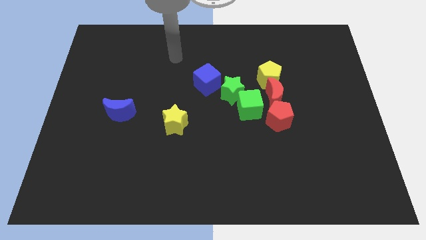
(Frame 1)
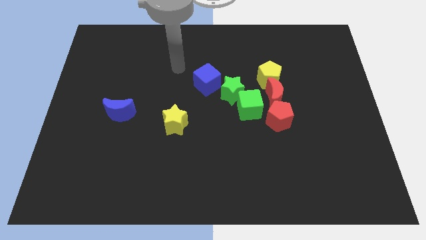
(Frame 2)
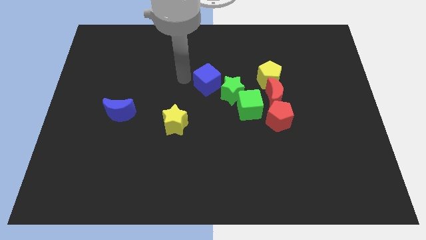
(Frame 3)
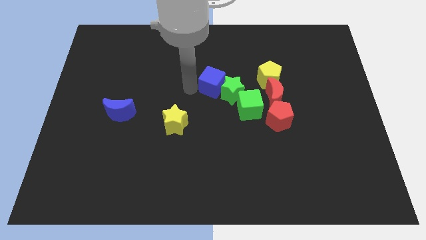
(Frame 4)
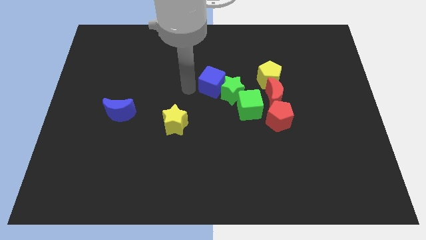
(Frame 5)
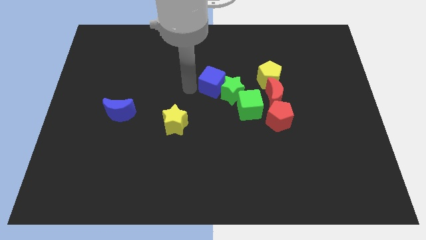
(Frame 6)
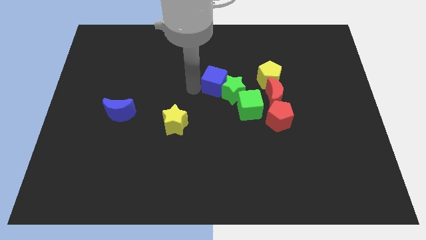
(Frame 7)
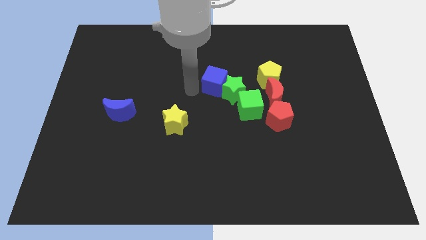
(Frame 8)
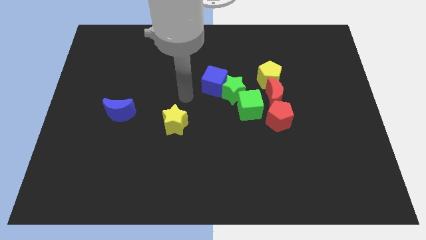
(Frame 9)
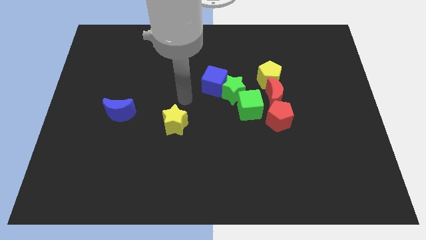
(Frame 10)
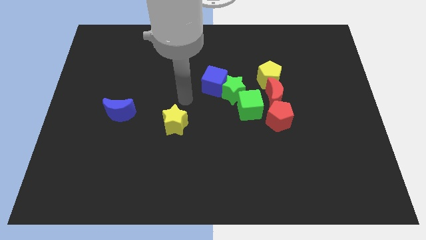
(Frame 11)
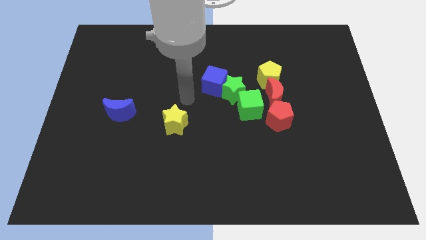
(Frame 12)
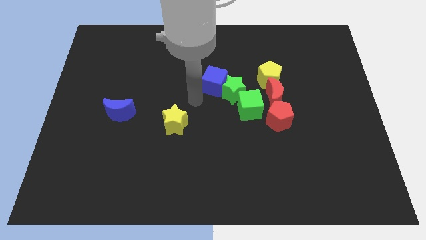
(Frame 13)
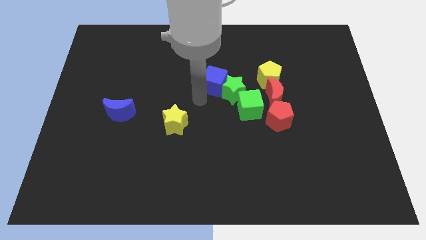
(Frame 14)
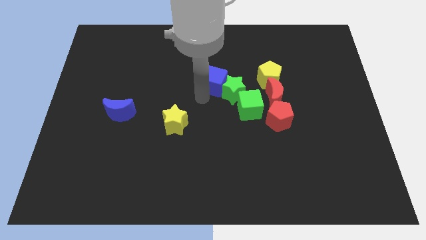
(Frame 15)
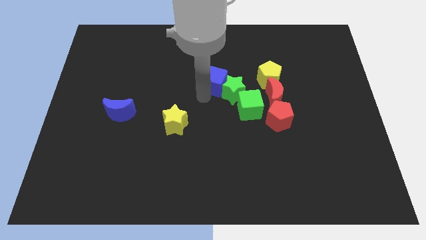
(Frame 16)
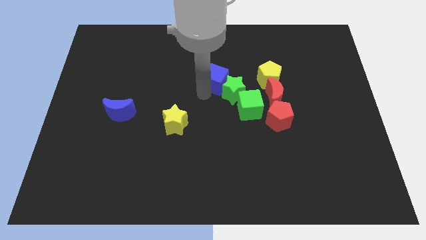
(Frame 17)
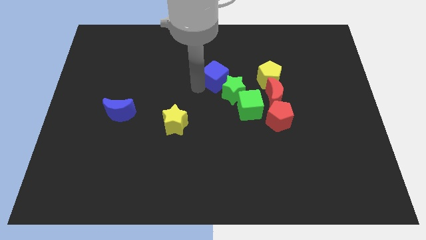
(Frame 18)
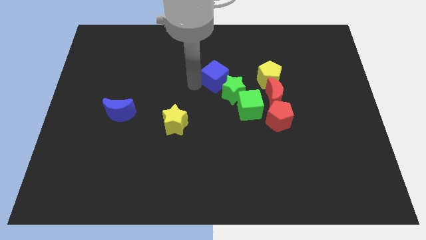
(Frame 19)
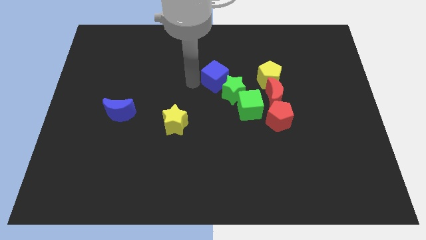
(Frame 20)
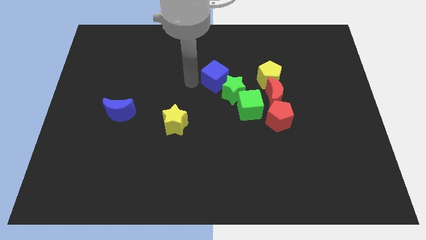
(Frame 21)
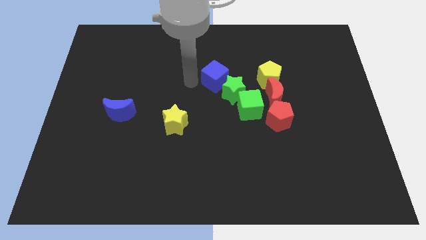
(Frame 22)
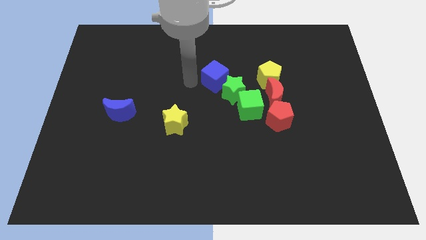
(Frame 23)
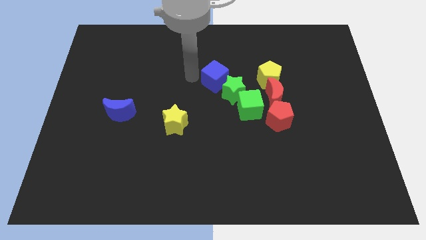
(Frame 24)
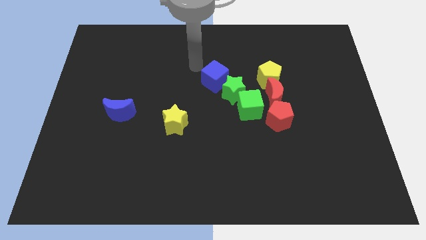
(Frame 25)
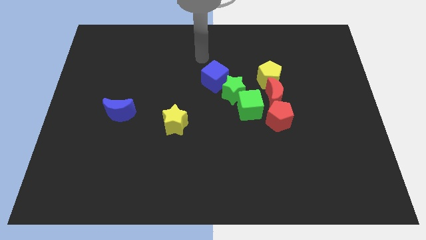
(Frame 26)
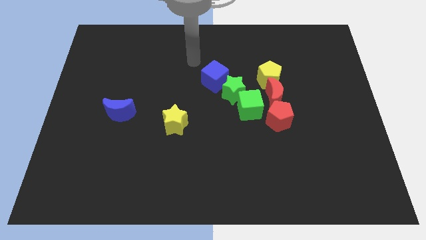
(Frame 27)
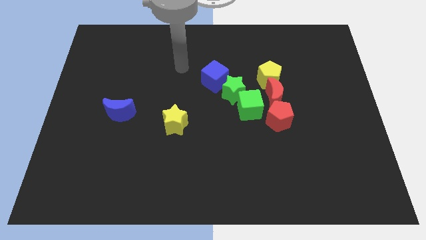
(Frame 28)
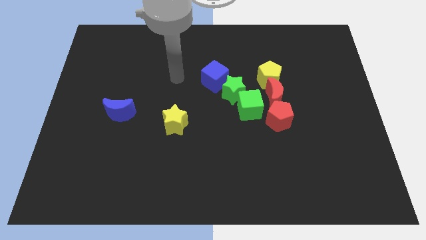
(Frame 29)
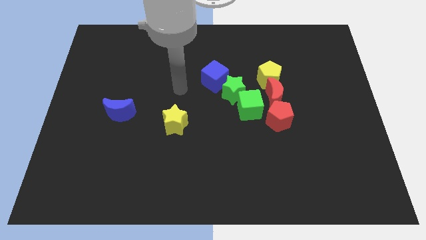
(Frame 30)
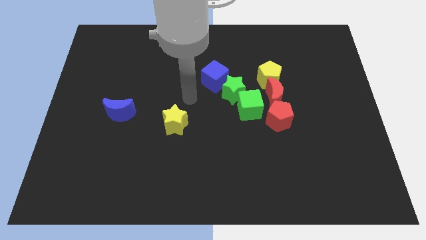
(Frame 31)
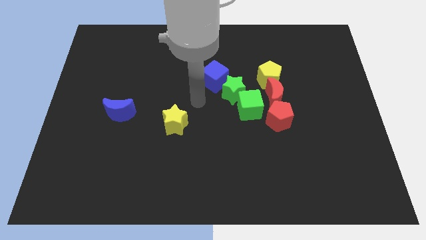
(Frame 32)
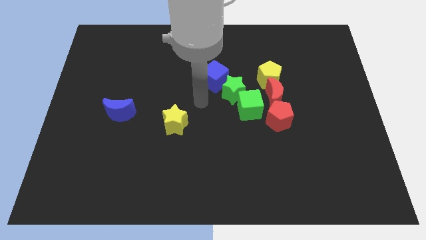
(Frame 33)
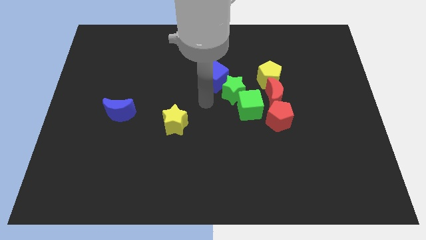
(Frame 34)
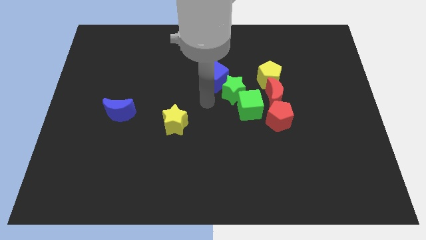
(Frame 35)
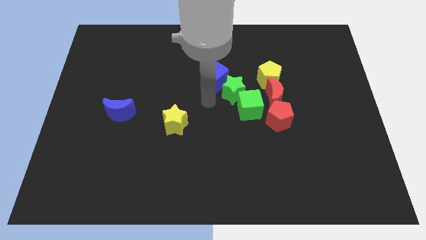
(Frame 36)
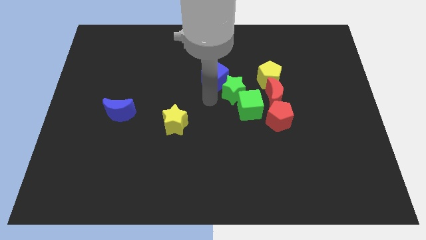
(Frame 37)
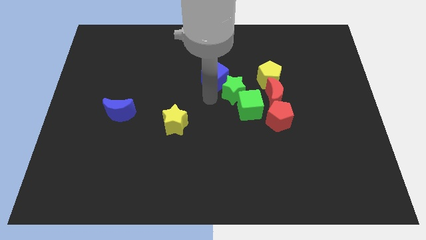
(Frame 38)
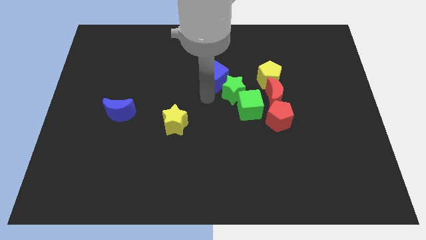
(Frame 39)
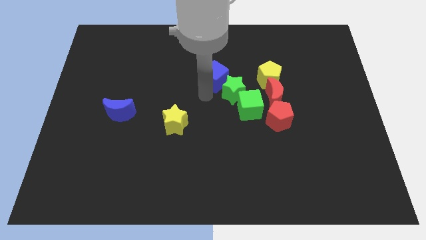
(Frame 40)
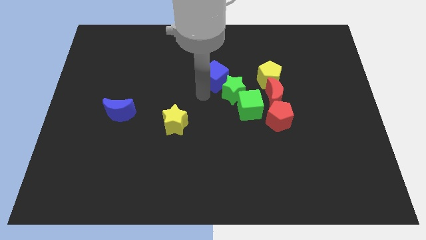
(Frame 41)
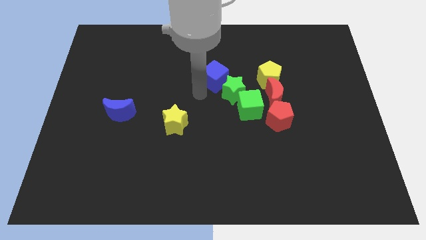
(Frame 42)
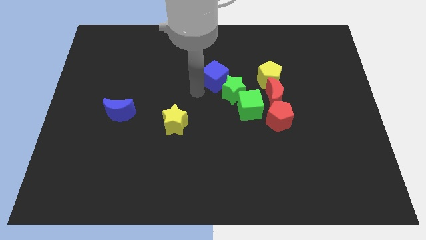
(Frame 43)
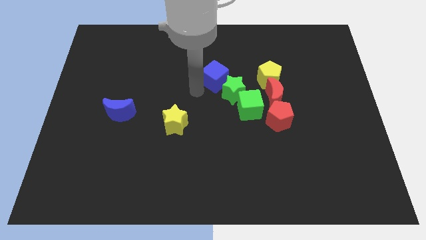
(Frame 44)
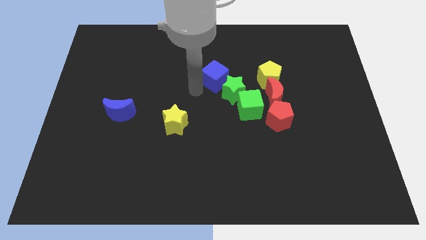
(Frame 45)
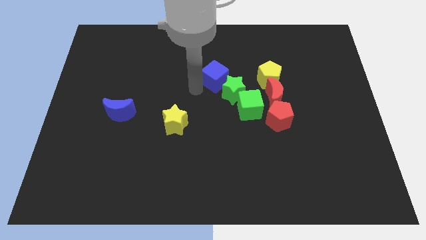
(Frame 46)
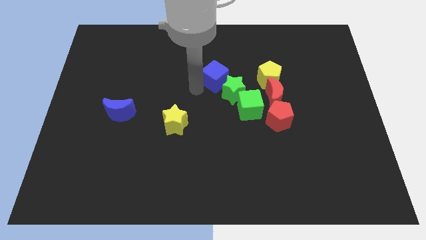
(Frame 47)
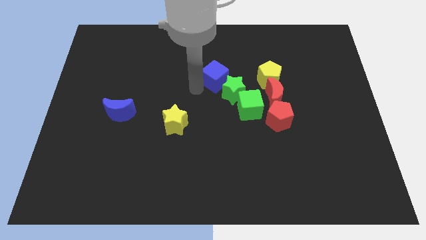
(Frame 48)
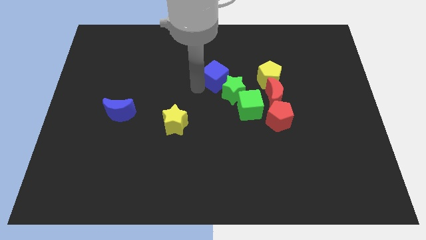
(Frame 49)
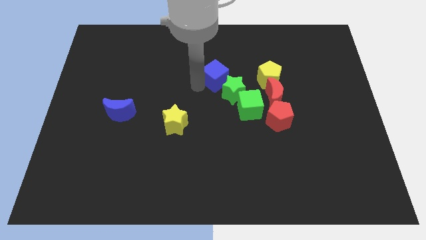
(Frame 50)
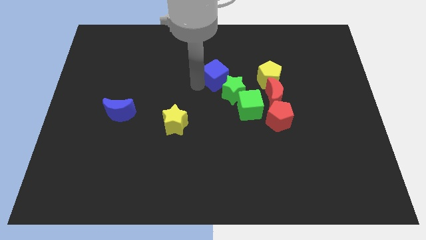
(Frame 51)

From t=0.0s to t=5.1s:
move the blue cube slightly to the right

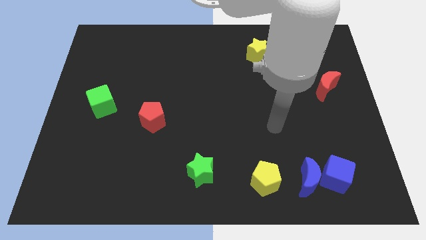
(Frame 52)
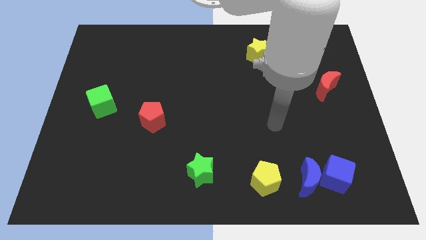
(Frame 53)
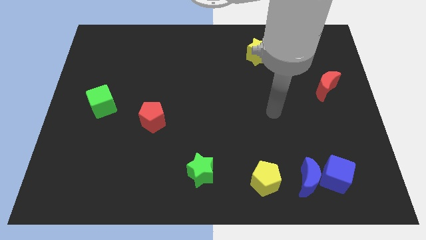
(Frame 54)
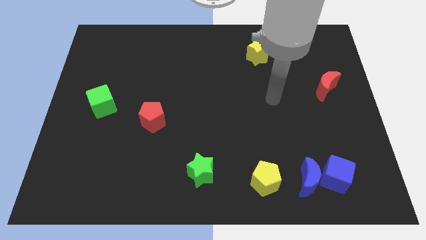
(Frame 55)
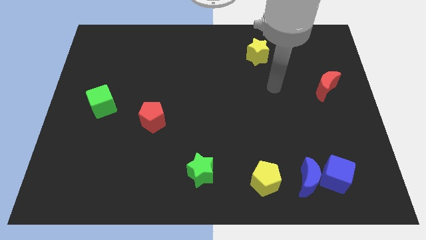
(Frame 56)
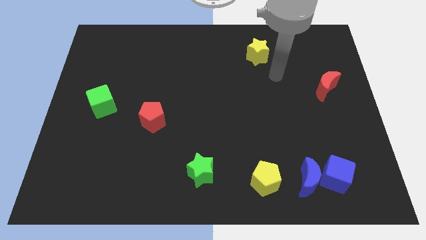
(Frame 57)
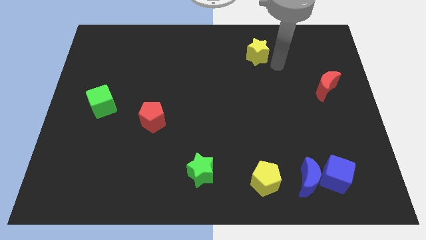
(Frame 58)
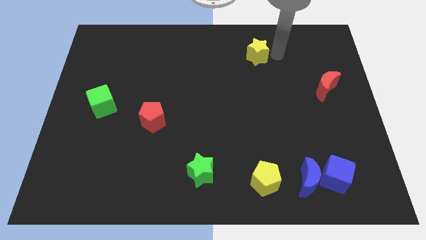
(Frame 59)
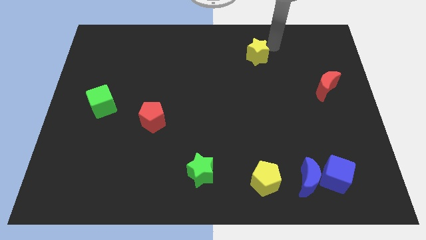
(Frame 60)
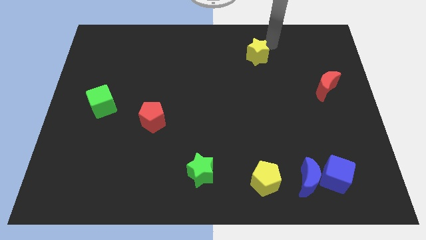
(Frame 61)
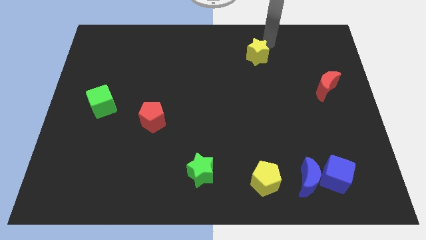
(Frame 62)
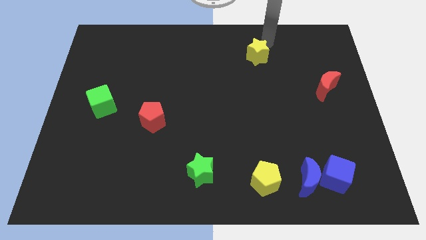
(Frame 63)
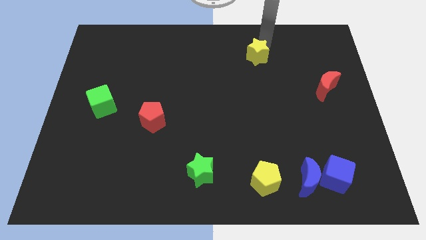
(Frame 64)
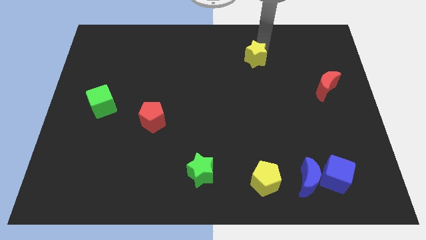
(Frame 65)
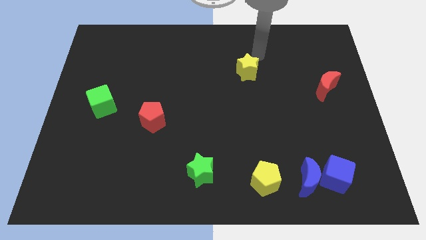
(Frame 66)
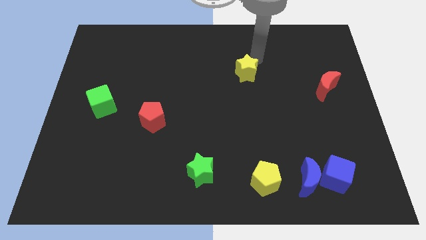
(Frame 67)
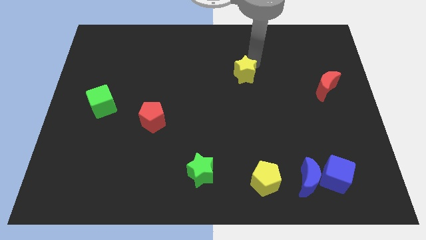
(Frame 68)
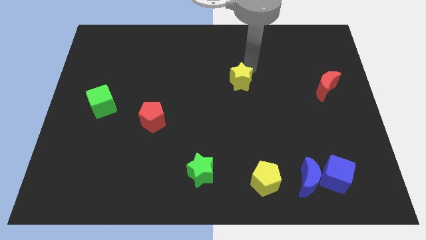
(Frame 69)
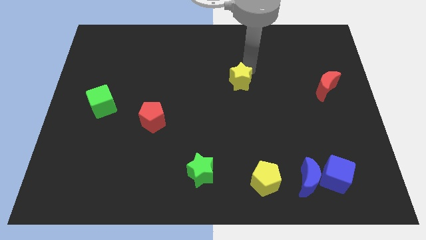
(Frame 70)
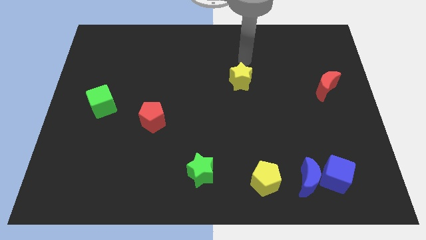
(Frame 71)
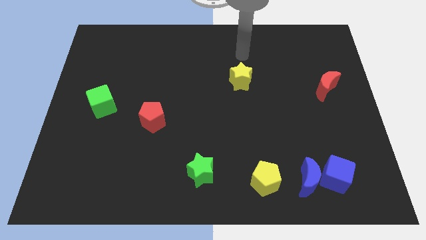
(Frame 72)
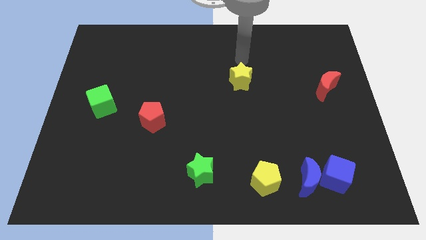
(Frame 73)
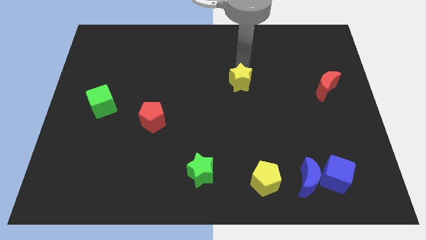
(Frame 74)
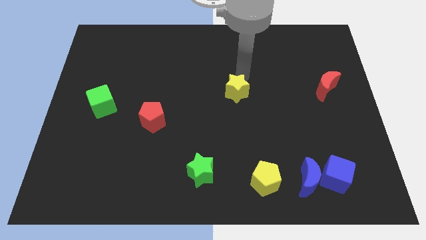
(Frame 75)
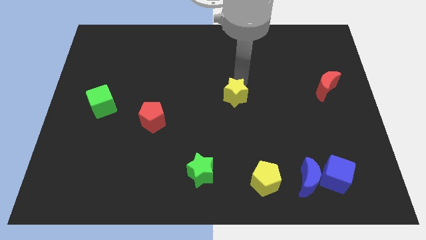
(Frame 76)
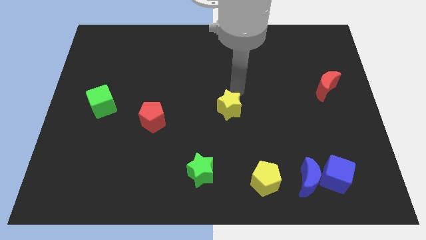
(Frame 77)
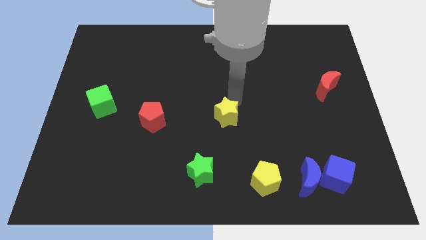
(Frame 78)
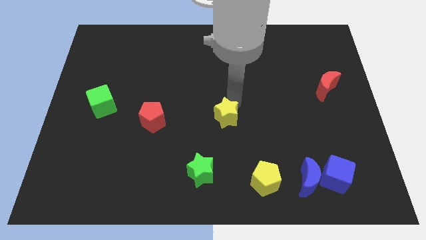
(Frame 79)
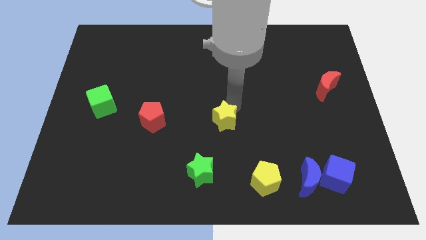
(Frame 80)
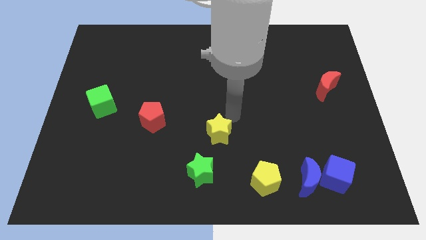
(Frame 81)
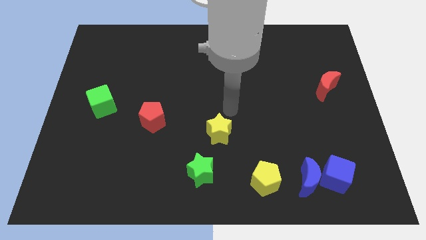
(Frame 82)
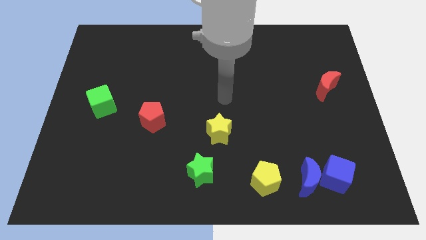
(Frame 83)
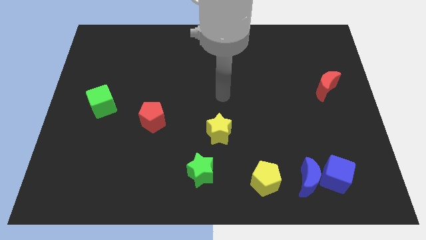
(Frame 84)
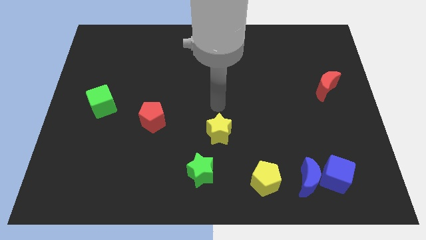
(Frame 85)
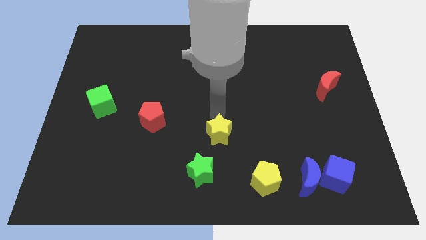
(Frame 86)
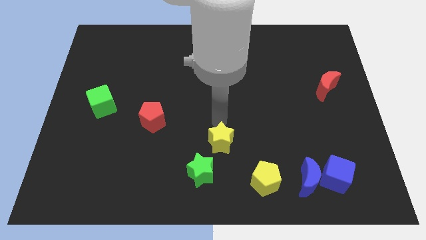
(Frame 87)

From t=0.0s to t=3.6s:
drag the yellow star to the bottom of the board
